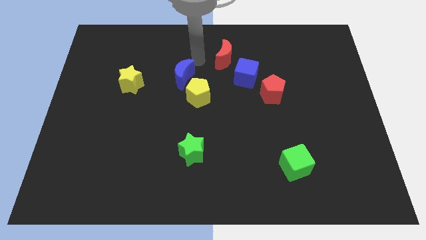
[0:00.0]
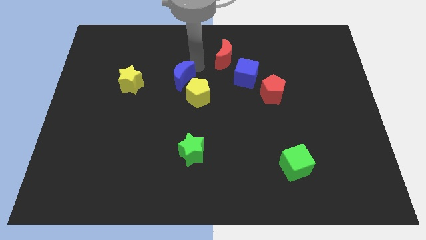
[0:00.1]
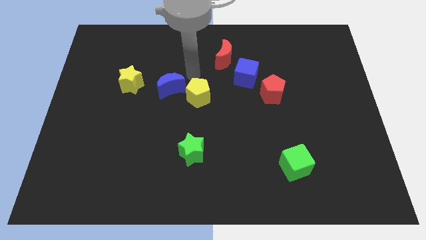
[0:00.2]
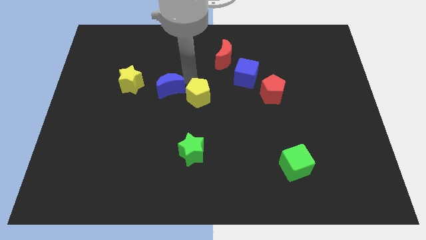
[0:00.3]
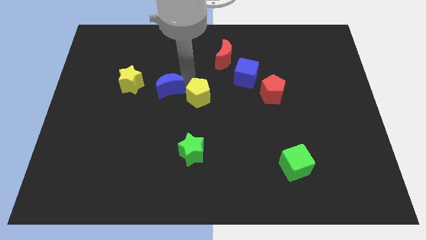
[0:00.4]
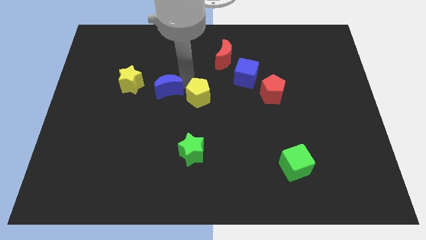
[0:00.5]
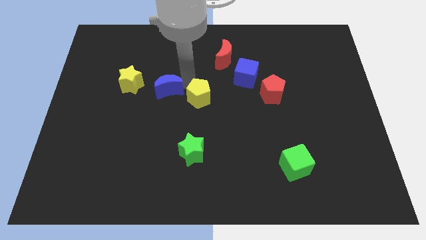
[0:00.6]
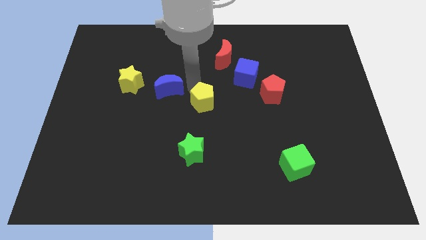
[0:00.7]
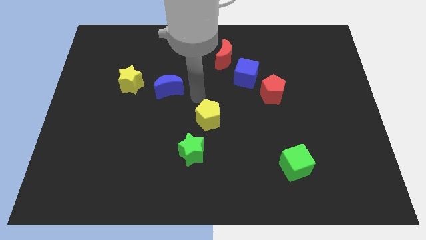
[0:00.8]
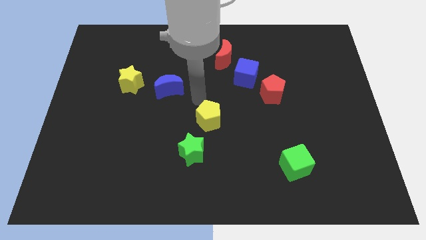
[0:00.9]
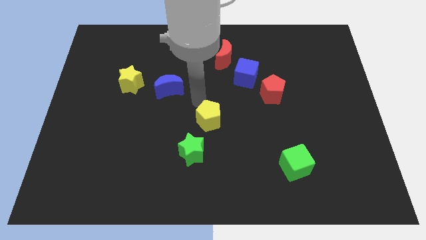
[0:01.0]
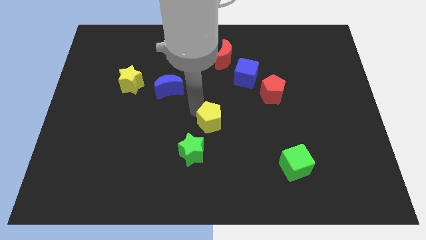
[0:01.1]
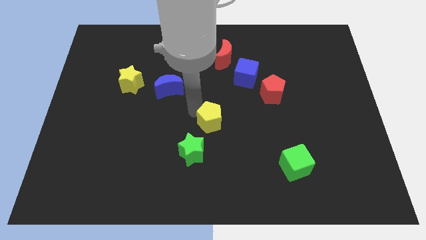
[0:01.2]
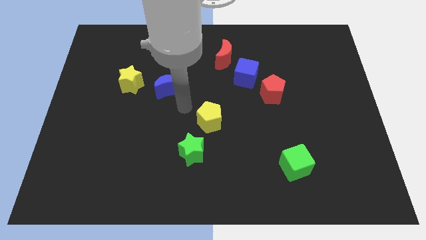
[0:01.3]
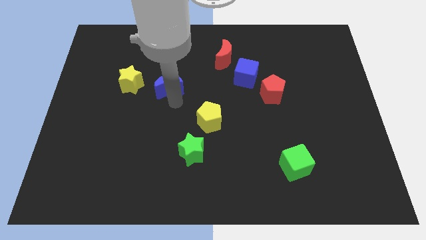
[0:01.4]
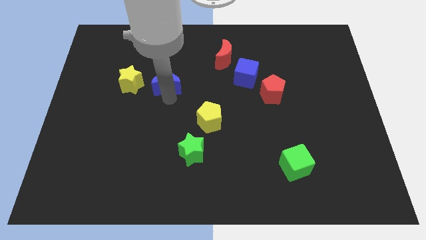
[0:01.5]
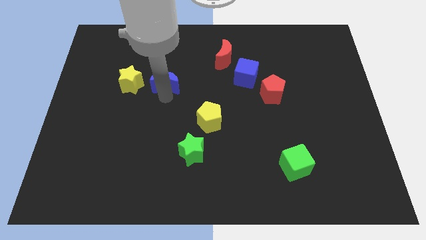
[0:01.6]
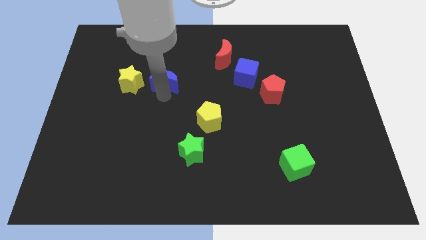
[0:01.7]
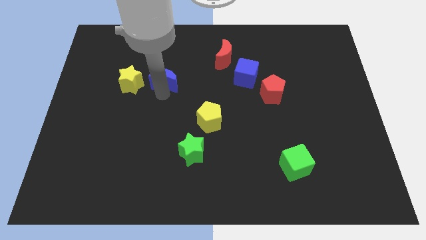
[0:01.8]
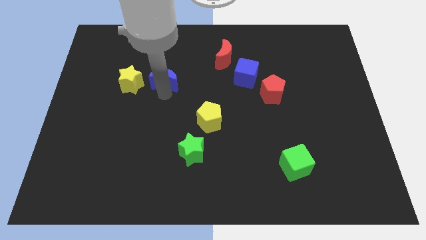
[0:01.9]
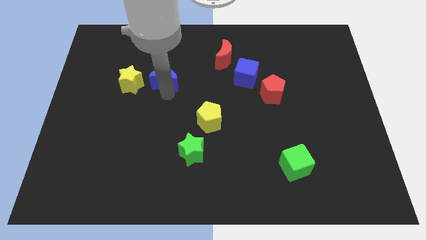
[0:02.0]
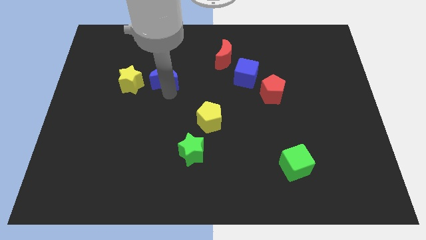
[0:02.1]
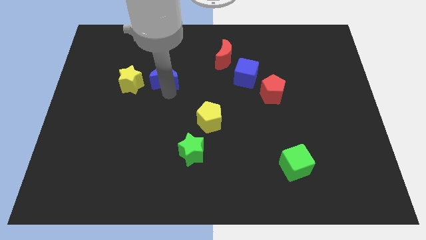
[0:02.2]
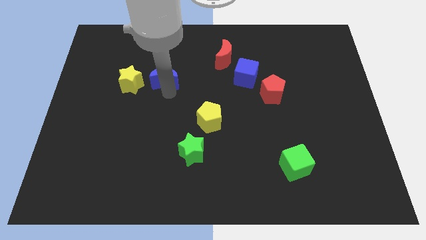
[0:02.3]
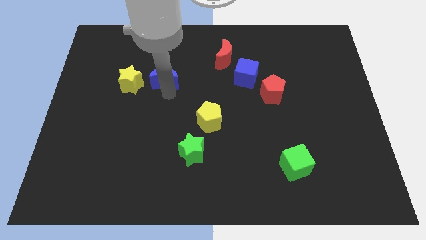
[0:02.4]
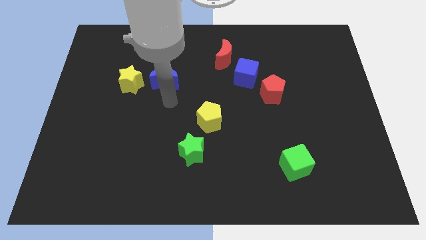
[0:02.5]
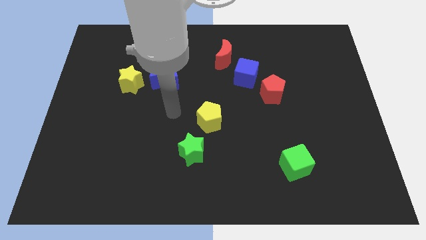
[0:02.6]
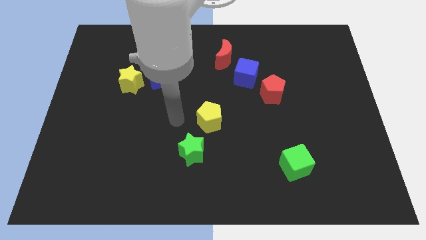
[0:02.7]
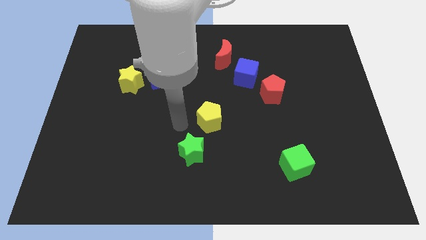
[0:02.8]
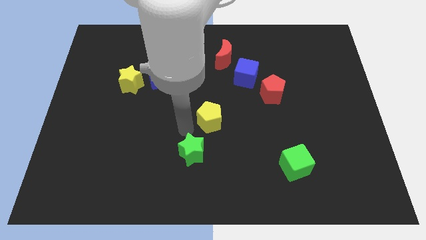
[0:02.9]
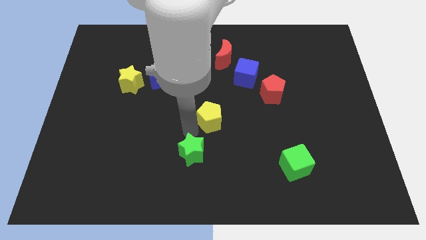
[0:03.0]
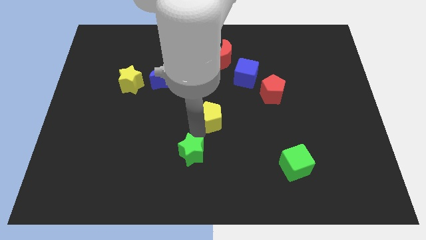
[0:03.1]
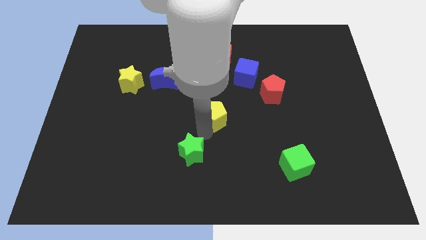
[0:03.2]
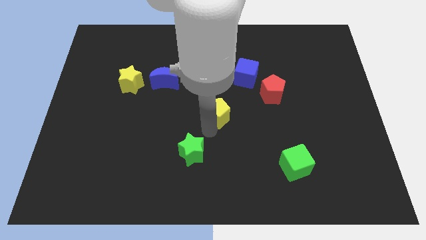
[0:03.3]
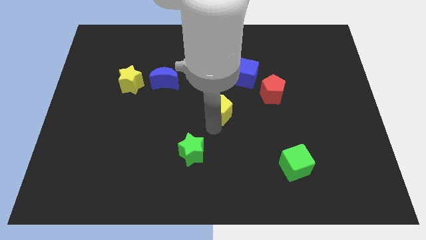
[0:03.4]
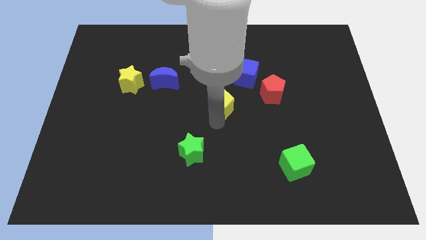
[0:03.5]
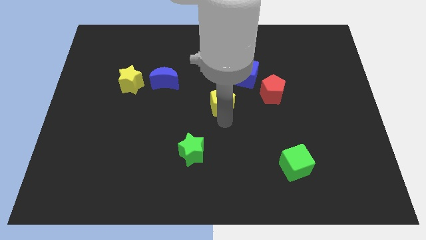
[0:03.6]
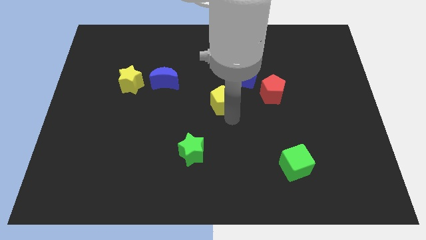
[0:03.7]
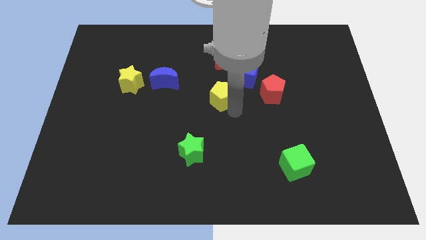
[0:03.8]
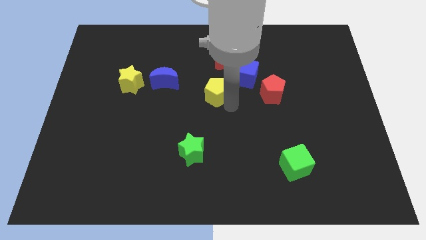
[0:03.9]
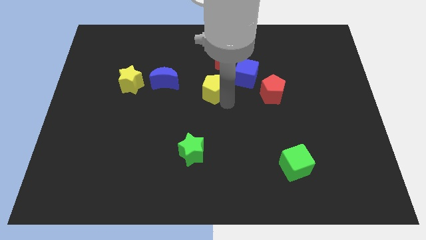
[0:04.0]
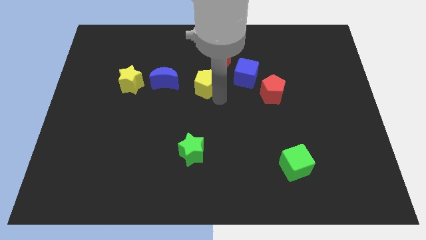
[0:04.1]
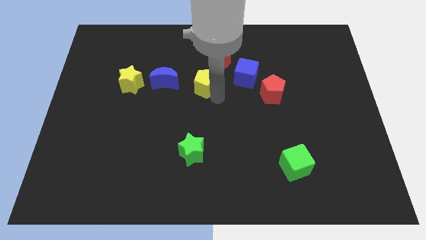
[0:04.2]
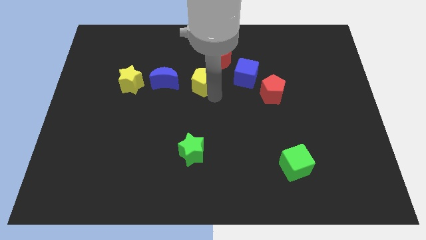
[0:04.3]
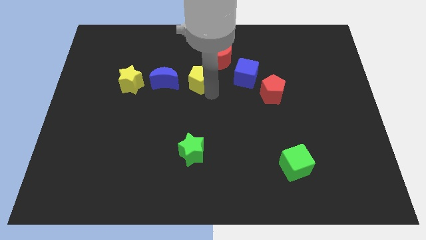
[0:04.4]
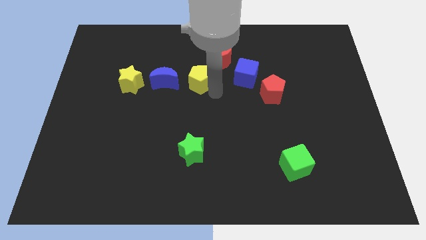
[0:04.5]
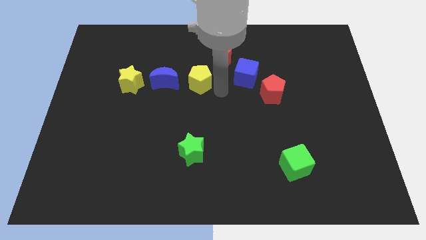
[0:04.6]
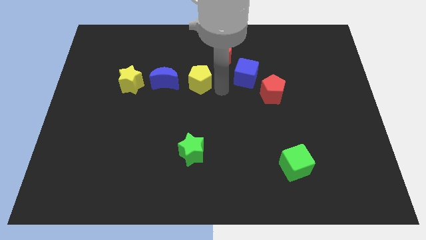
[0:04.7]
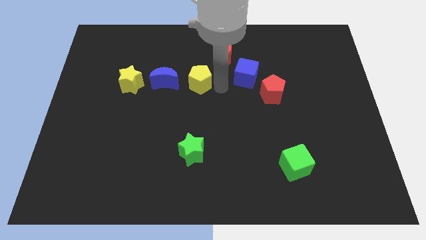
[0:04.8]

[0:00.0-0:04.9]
move the blue crescent and yellow pentagon towards yellow star to form a row

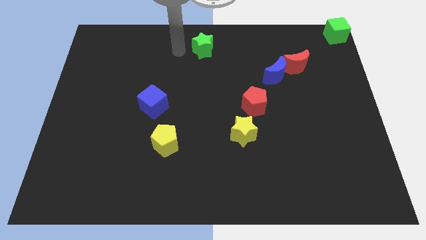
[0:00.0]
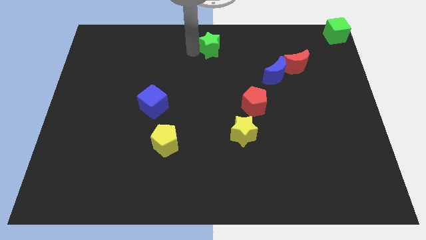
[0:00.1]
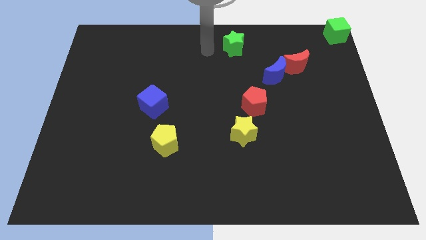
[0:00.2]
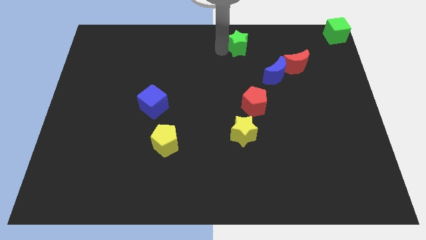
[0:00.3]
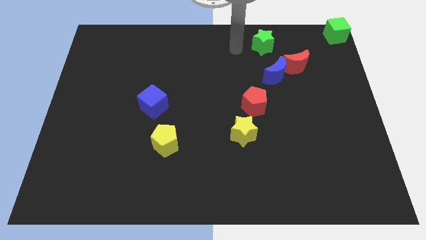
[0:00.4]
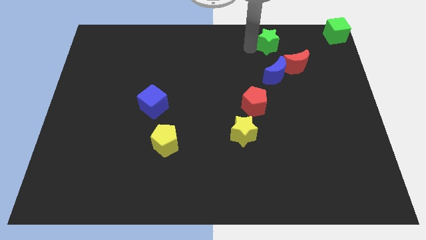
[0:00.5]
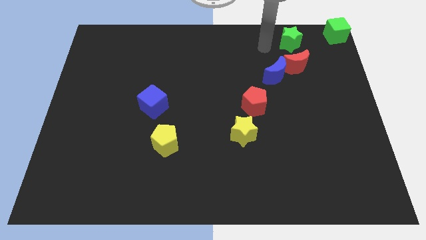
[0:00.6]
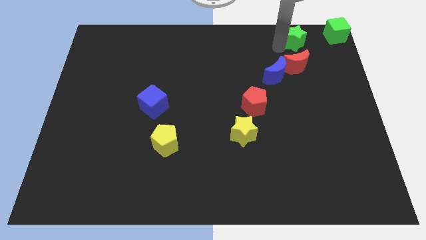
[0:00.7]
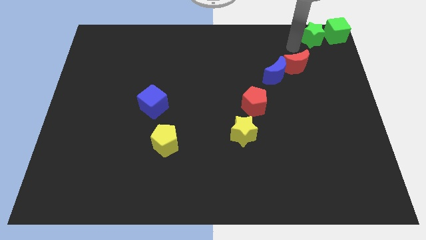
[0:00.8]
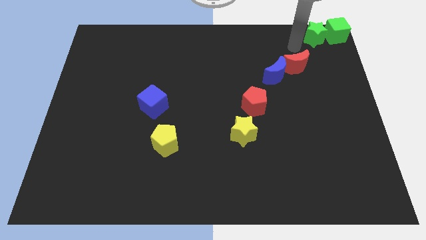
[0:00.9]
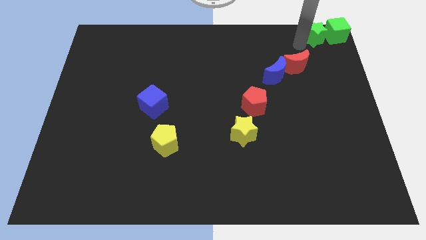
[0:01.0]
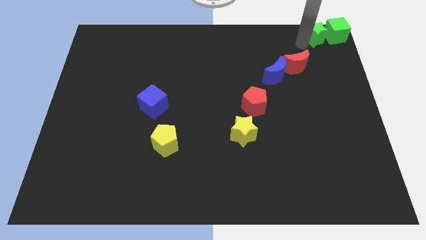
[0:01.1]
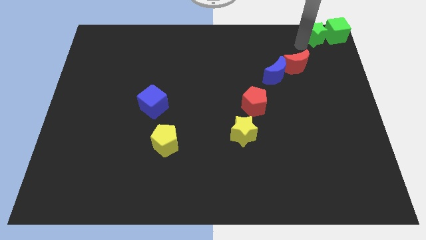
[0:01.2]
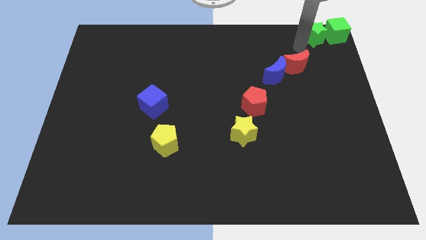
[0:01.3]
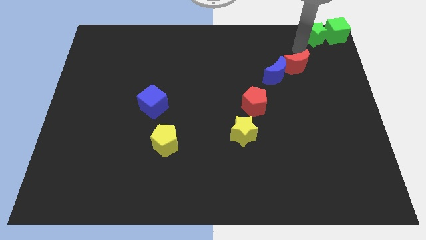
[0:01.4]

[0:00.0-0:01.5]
move the green star towards the left of the green cube

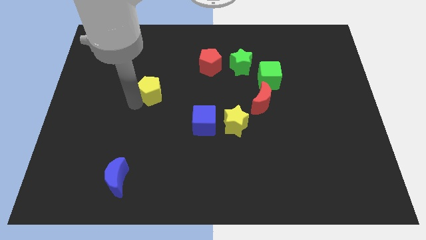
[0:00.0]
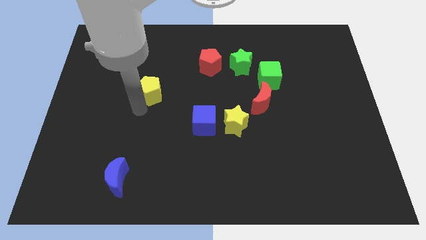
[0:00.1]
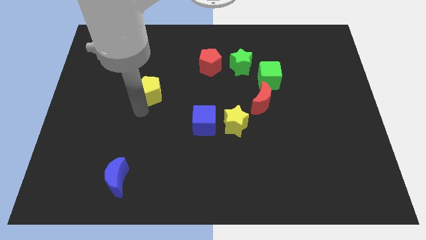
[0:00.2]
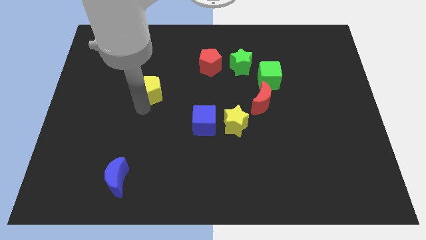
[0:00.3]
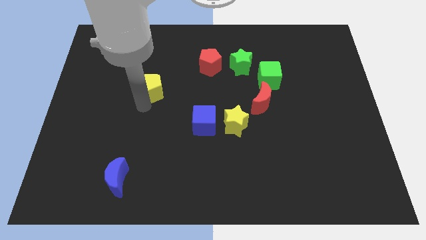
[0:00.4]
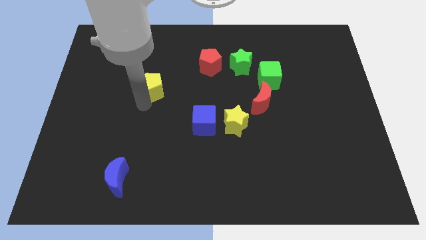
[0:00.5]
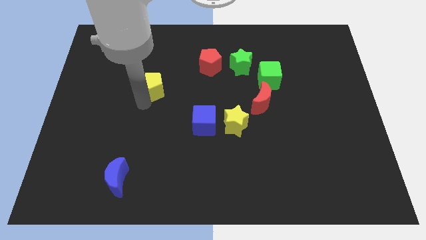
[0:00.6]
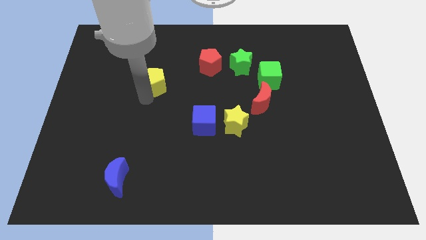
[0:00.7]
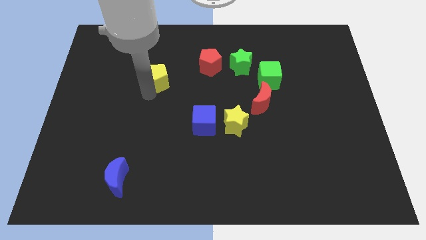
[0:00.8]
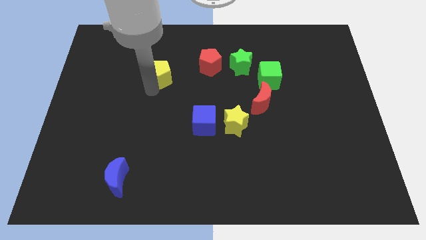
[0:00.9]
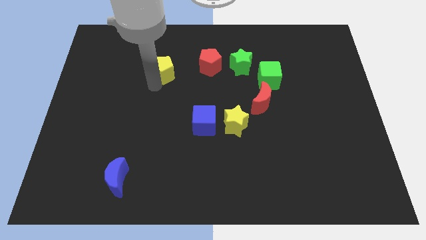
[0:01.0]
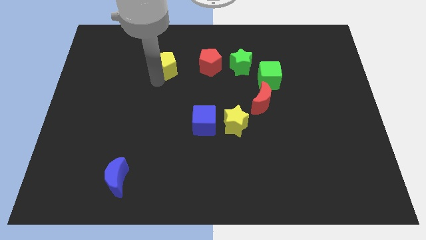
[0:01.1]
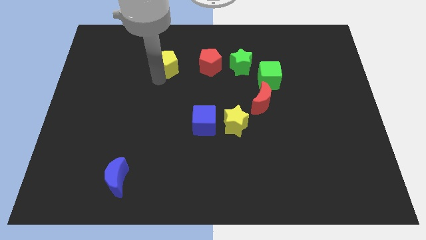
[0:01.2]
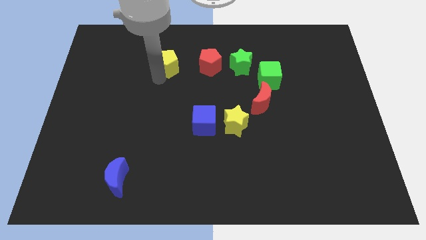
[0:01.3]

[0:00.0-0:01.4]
push the yellow pentagon to the left of red pentagon

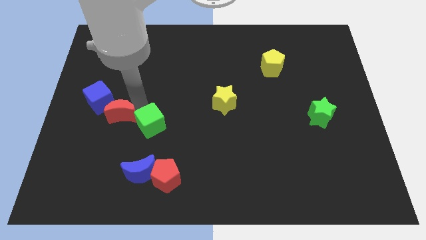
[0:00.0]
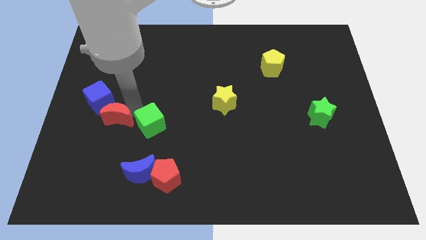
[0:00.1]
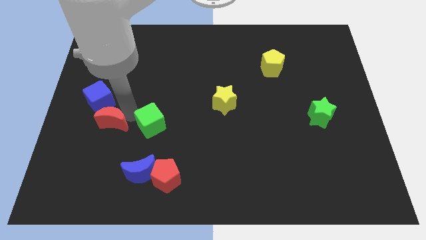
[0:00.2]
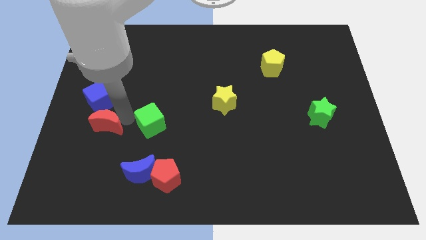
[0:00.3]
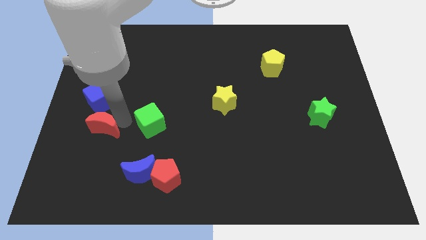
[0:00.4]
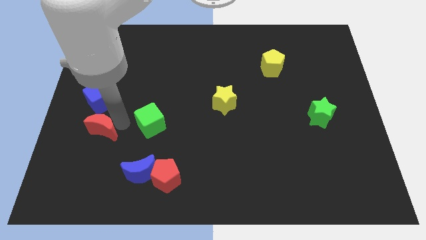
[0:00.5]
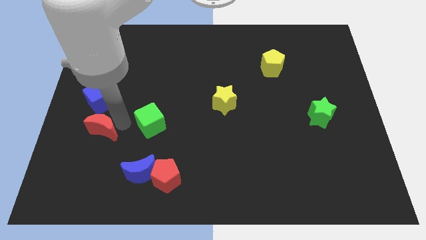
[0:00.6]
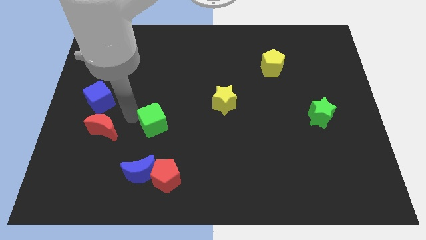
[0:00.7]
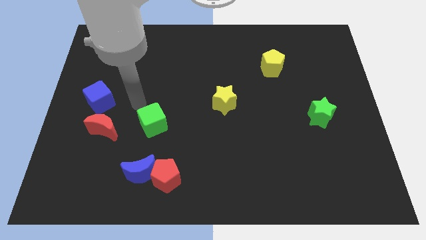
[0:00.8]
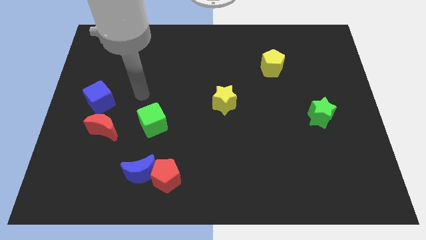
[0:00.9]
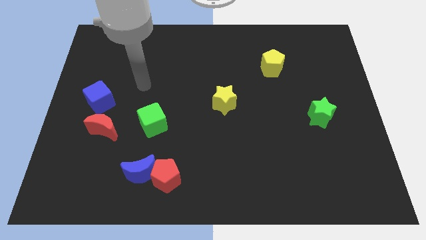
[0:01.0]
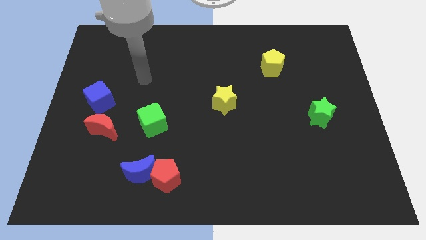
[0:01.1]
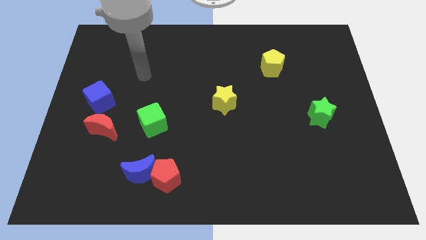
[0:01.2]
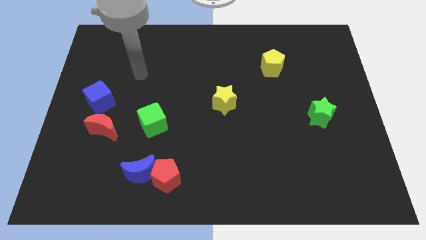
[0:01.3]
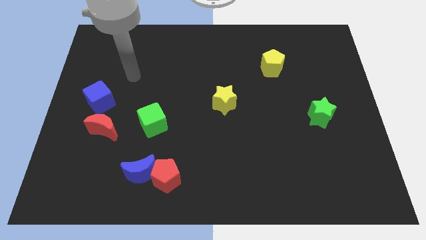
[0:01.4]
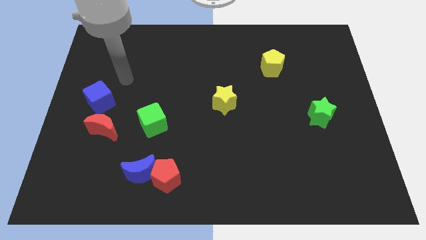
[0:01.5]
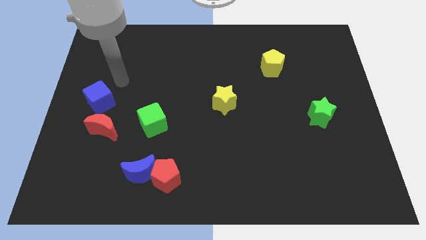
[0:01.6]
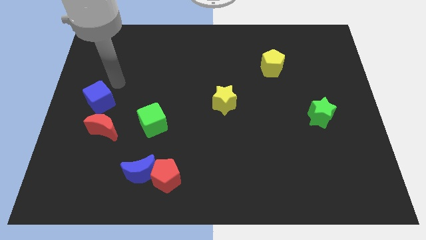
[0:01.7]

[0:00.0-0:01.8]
move the red crescent to the bottom of the blue cube
